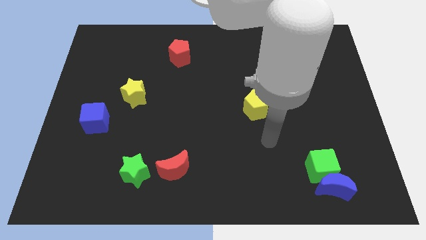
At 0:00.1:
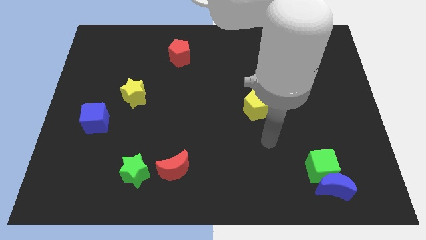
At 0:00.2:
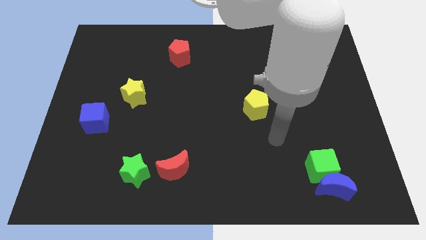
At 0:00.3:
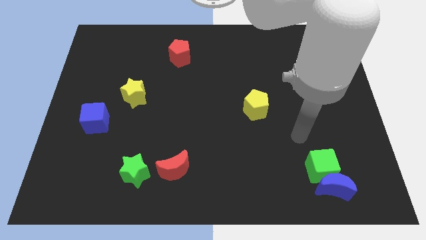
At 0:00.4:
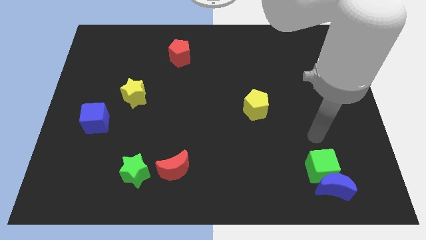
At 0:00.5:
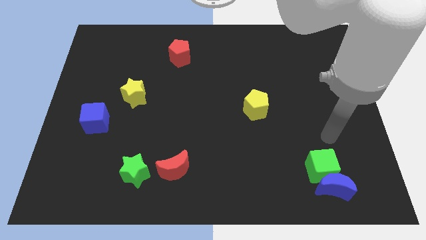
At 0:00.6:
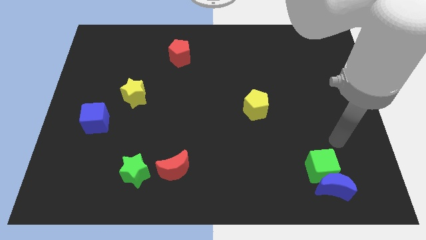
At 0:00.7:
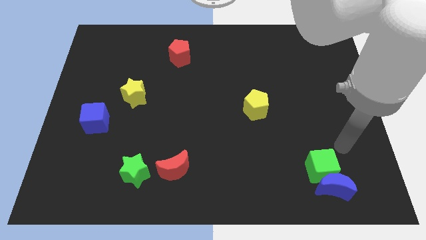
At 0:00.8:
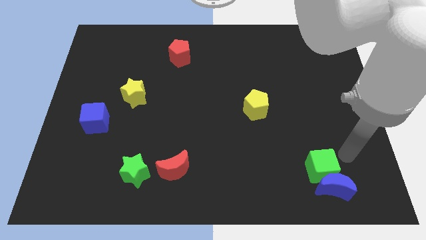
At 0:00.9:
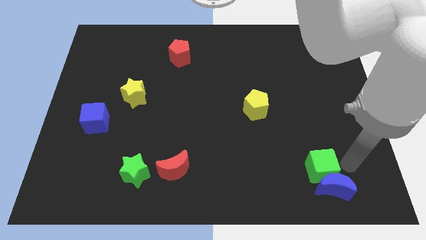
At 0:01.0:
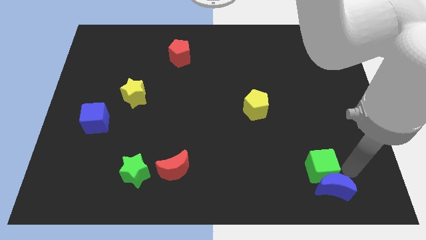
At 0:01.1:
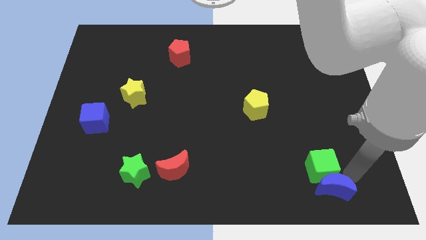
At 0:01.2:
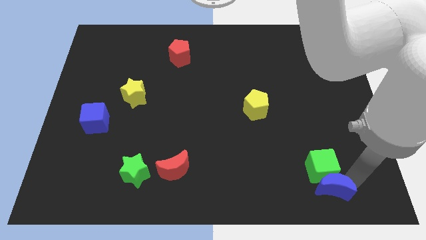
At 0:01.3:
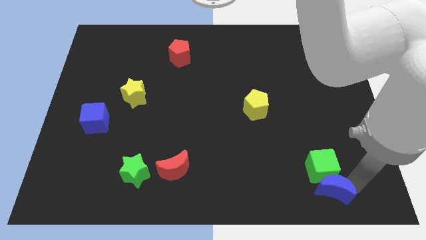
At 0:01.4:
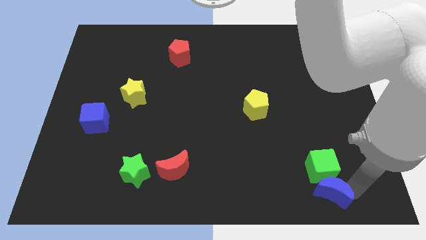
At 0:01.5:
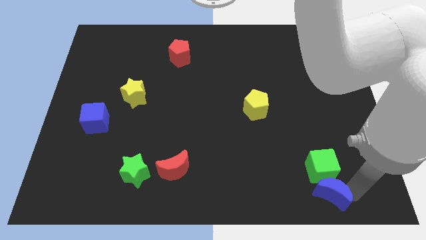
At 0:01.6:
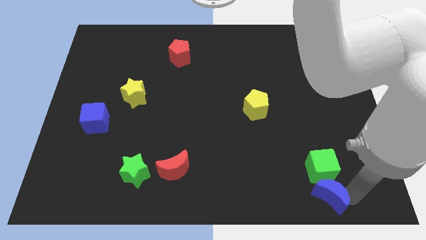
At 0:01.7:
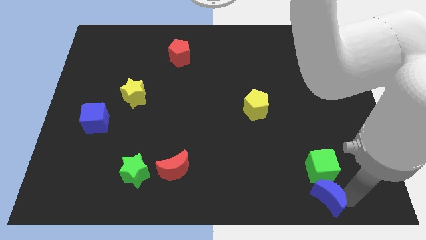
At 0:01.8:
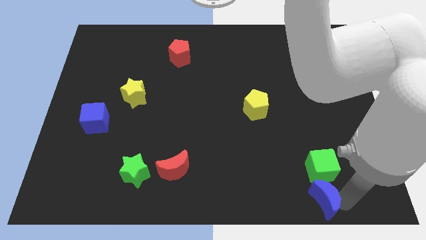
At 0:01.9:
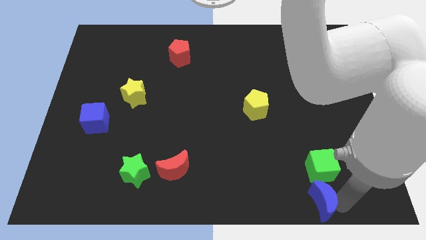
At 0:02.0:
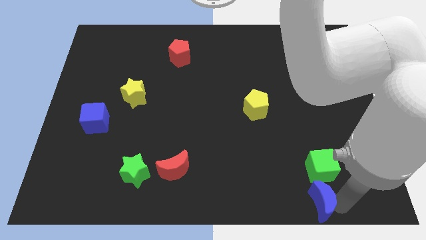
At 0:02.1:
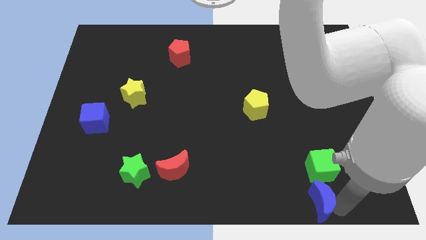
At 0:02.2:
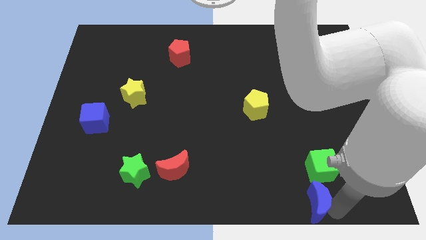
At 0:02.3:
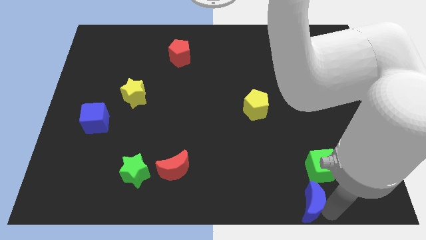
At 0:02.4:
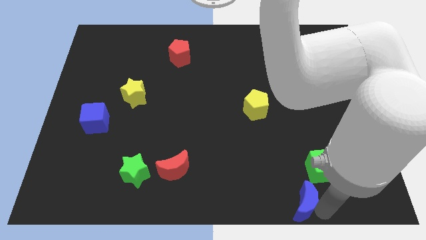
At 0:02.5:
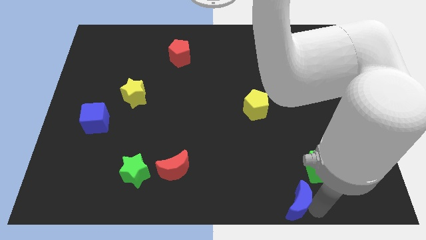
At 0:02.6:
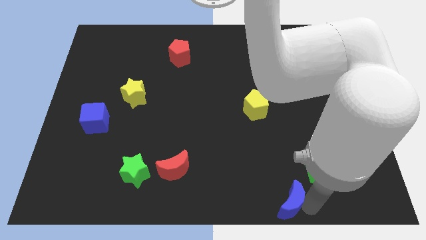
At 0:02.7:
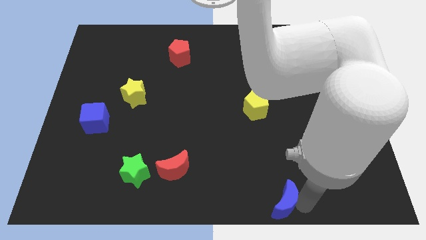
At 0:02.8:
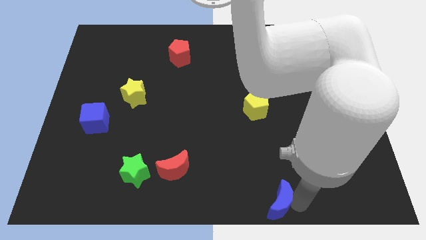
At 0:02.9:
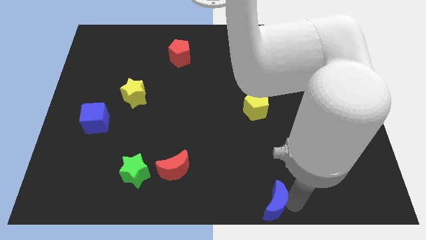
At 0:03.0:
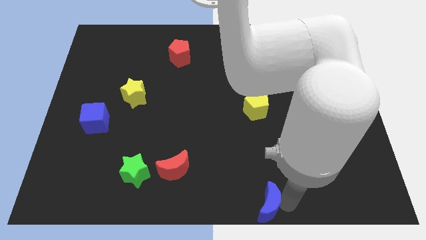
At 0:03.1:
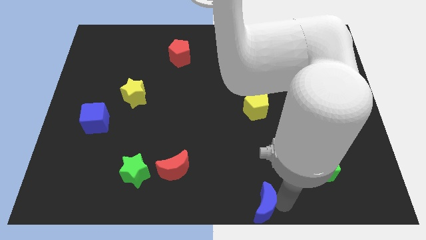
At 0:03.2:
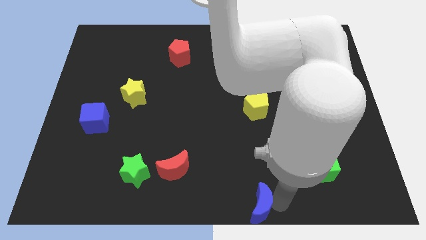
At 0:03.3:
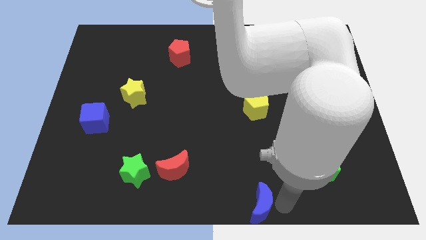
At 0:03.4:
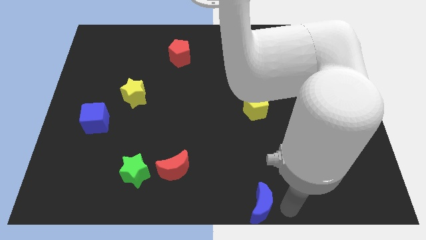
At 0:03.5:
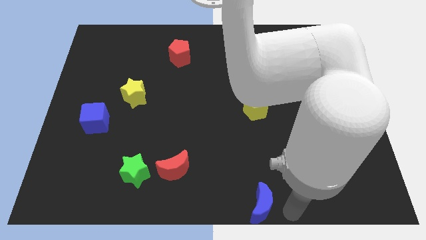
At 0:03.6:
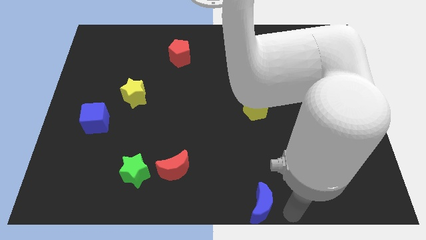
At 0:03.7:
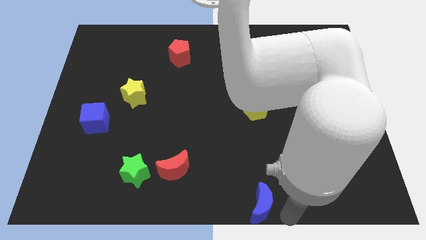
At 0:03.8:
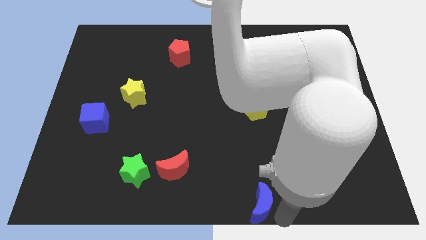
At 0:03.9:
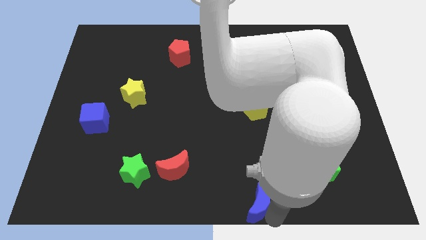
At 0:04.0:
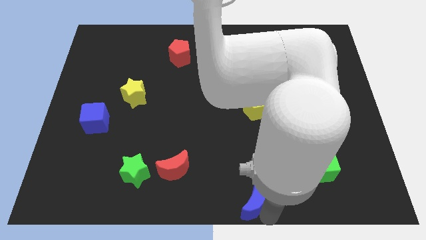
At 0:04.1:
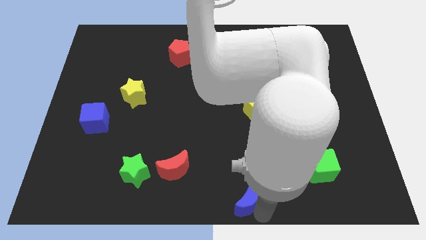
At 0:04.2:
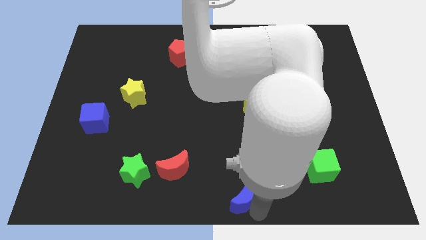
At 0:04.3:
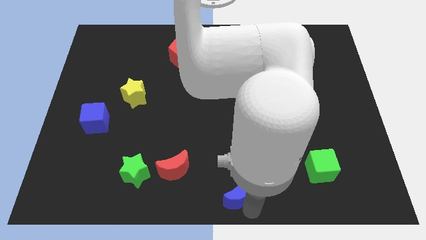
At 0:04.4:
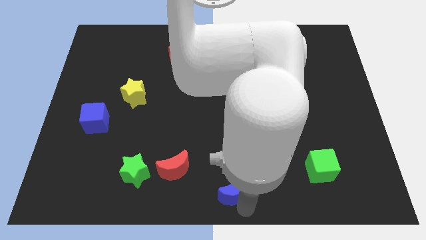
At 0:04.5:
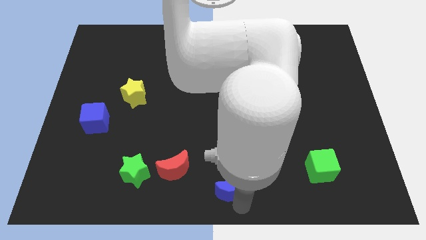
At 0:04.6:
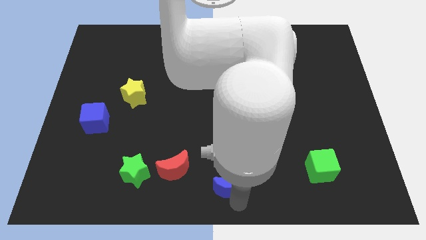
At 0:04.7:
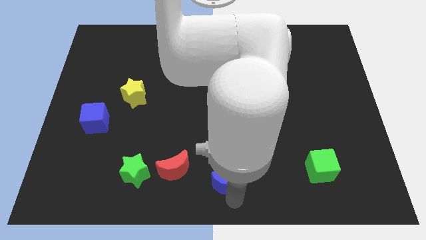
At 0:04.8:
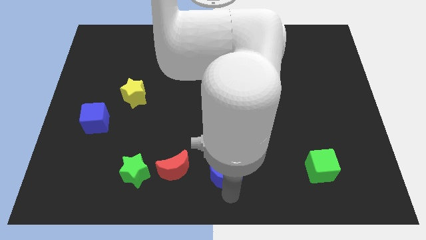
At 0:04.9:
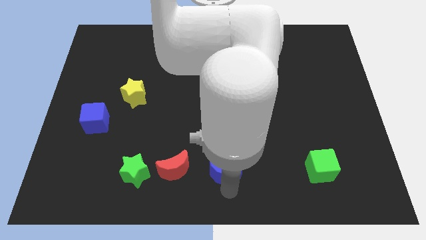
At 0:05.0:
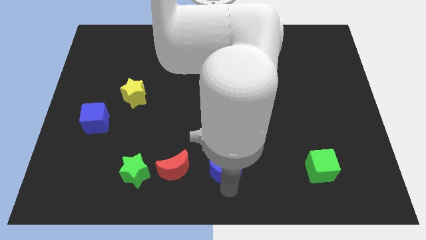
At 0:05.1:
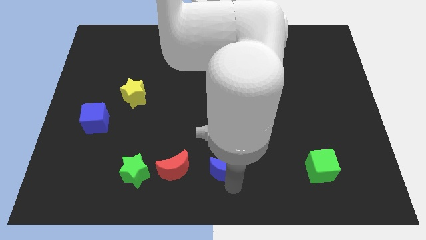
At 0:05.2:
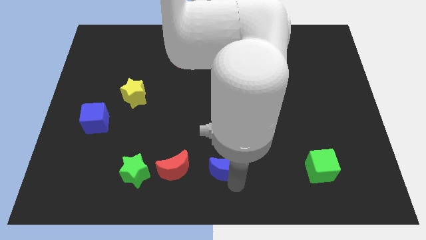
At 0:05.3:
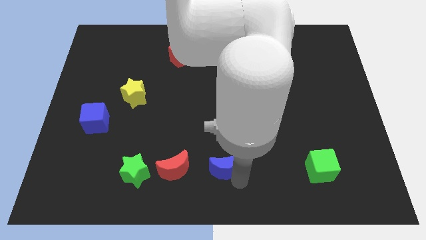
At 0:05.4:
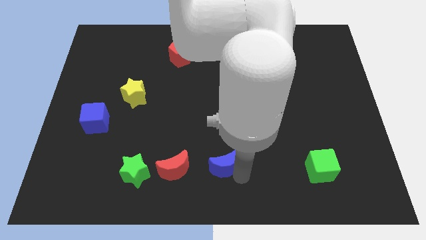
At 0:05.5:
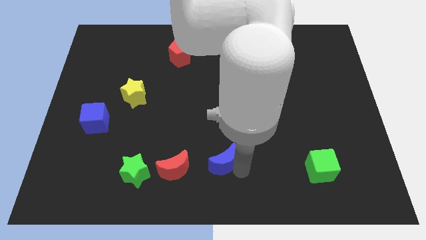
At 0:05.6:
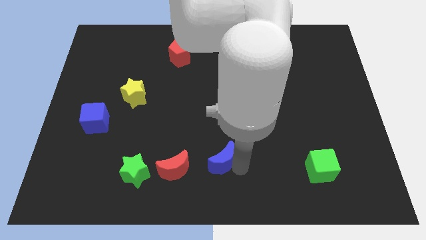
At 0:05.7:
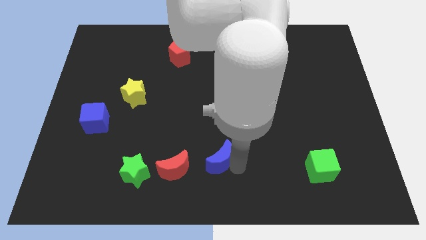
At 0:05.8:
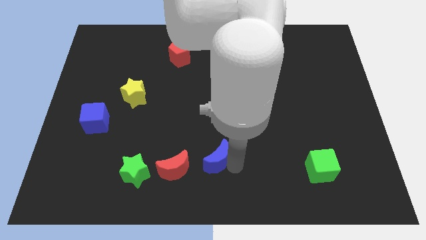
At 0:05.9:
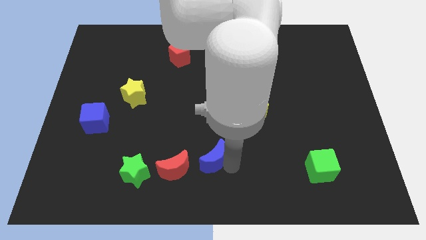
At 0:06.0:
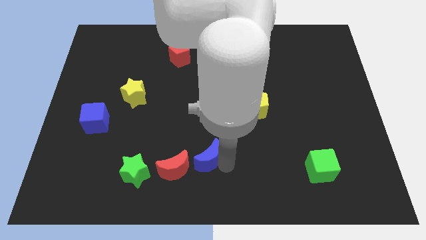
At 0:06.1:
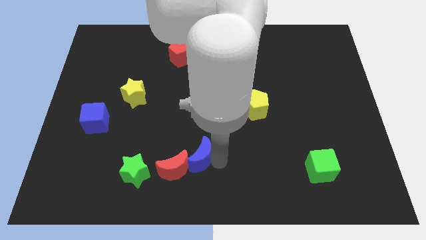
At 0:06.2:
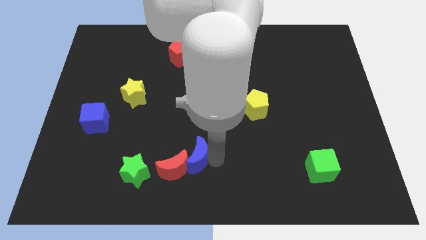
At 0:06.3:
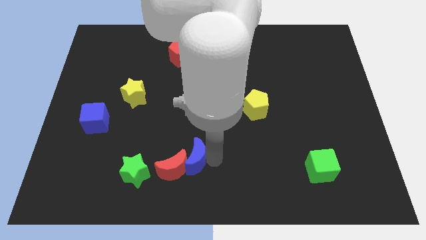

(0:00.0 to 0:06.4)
slide the blue moon to the red moon

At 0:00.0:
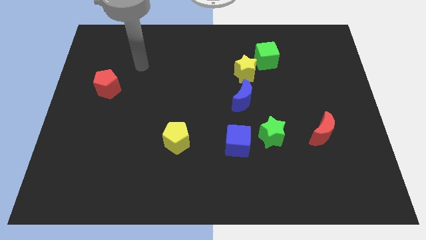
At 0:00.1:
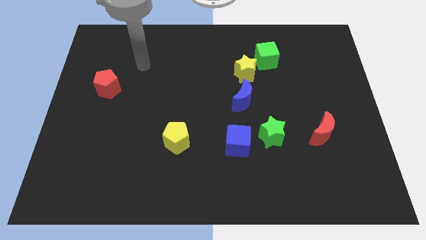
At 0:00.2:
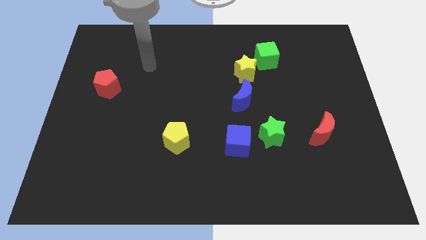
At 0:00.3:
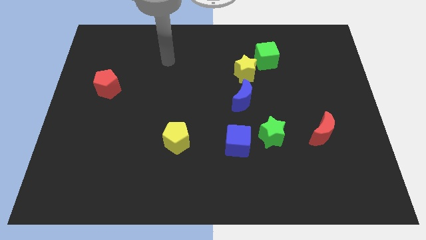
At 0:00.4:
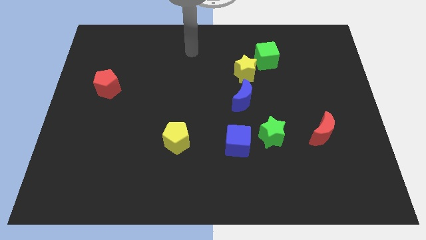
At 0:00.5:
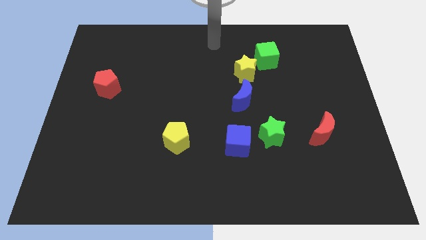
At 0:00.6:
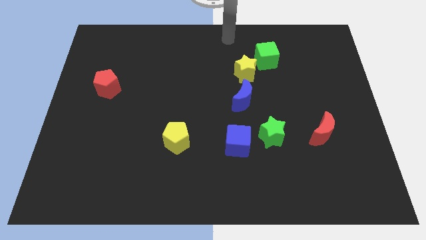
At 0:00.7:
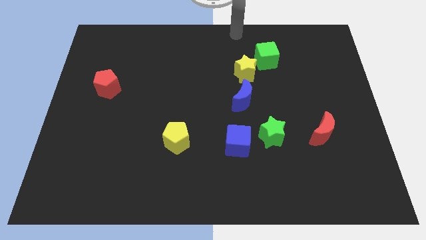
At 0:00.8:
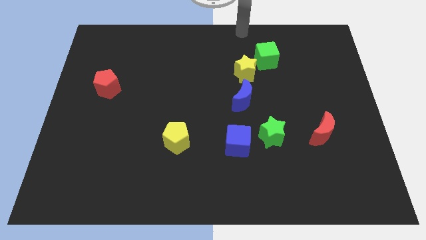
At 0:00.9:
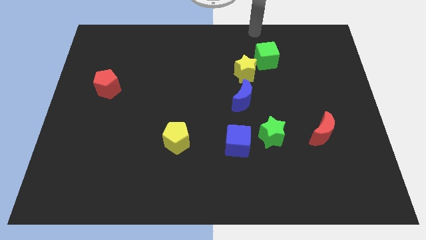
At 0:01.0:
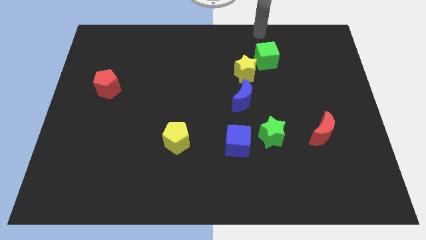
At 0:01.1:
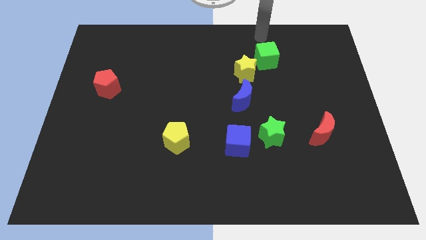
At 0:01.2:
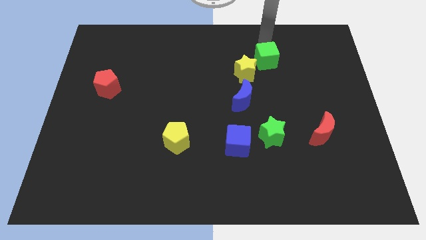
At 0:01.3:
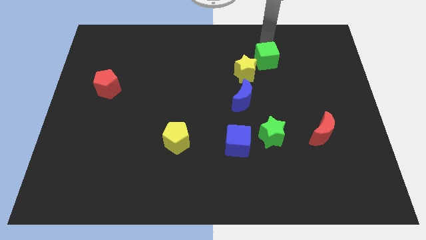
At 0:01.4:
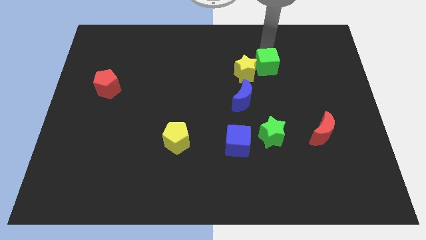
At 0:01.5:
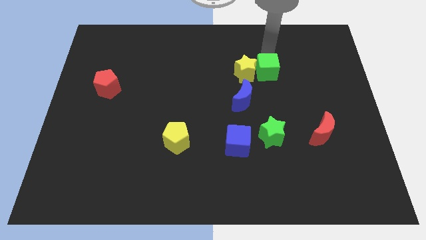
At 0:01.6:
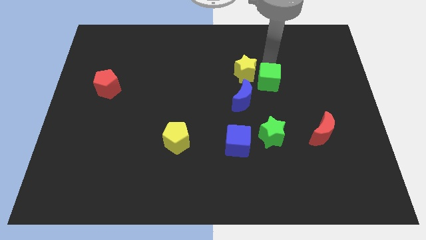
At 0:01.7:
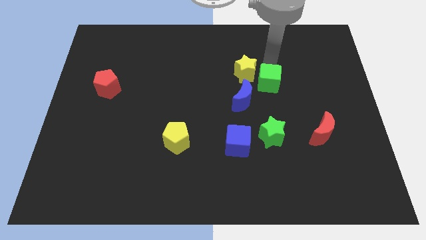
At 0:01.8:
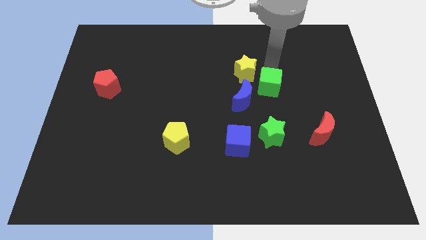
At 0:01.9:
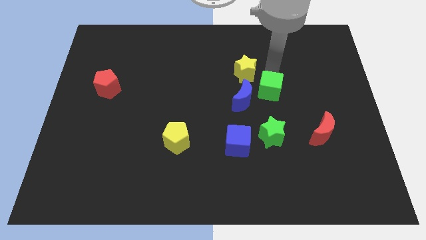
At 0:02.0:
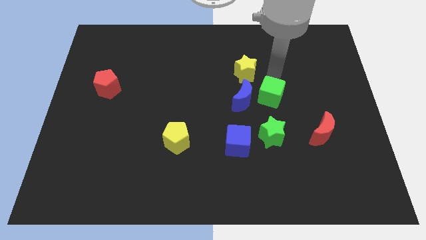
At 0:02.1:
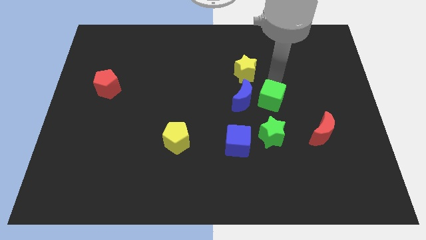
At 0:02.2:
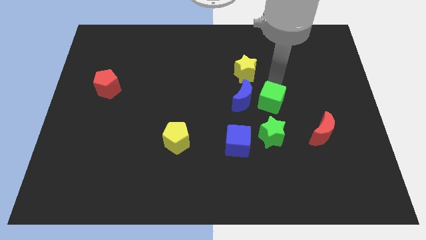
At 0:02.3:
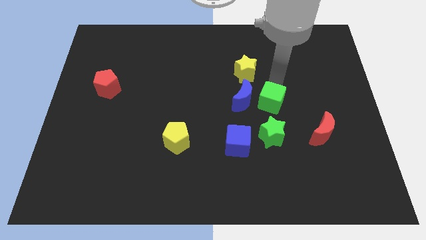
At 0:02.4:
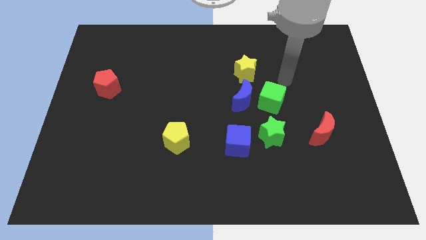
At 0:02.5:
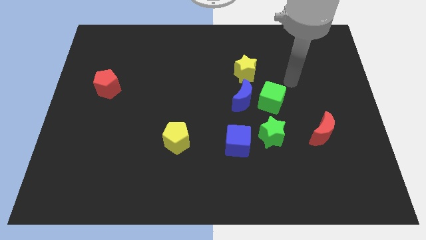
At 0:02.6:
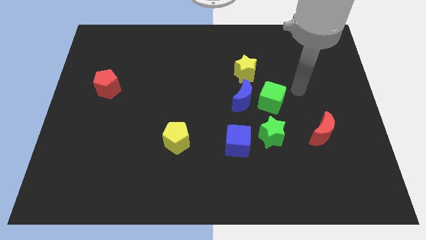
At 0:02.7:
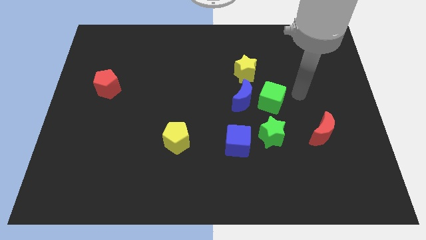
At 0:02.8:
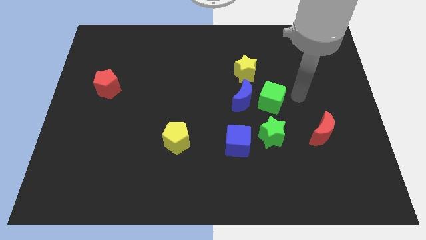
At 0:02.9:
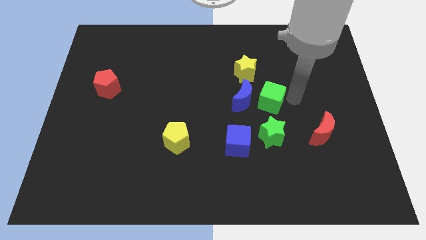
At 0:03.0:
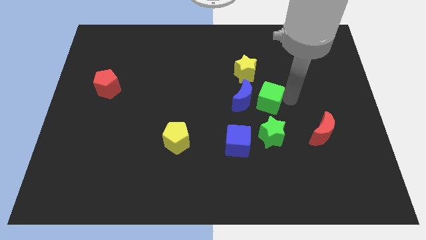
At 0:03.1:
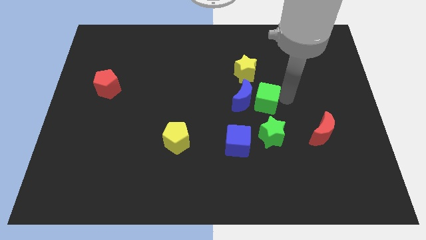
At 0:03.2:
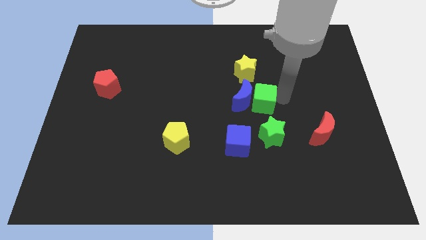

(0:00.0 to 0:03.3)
put the green cube next to the blue moon
